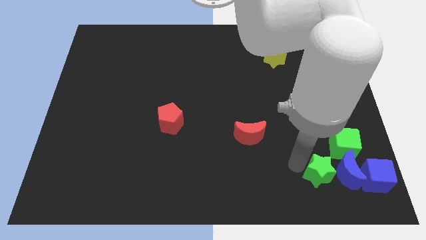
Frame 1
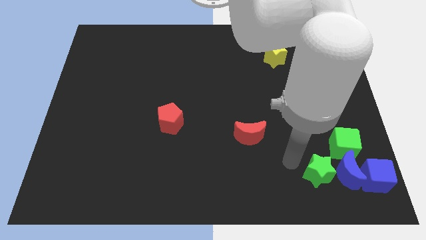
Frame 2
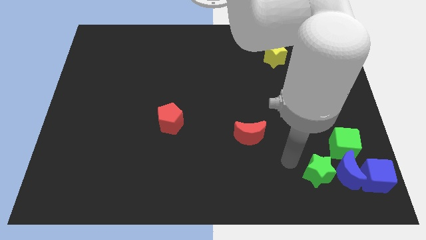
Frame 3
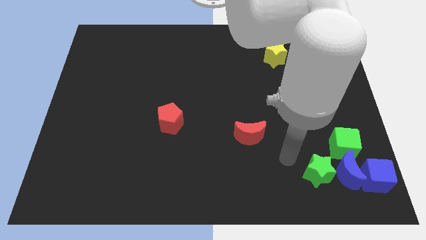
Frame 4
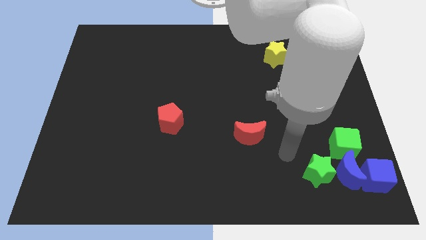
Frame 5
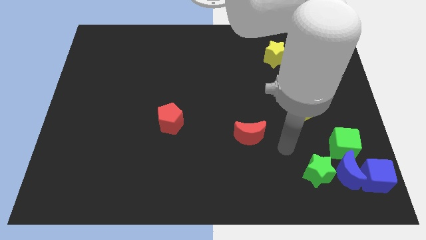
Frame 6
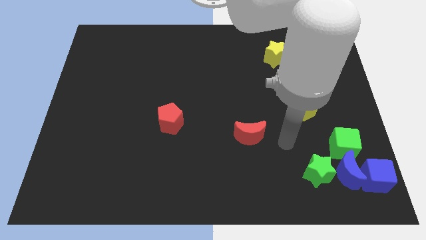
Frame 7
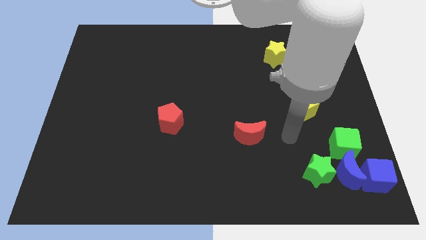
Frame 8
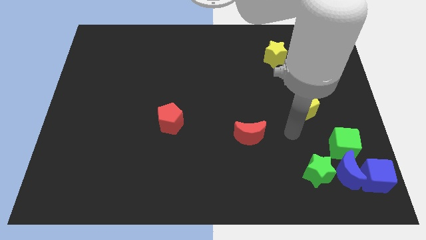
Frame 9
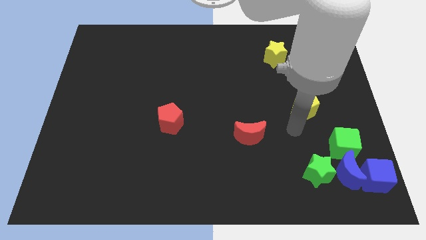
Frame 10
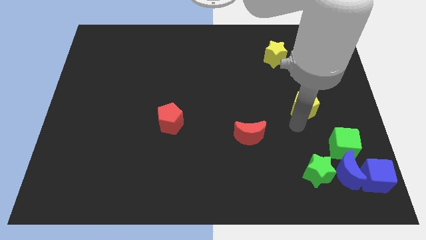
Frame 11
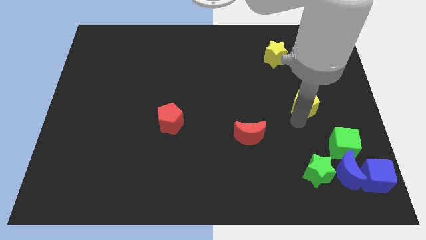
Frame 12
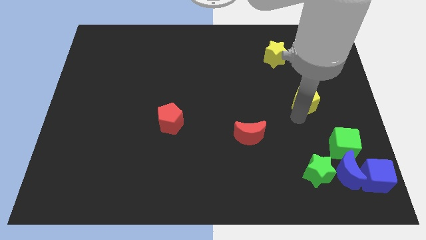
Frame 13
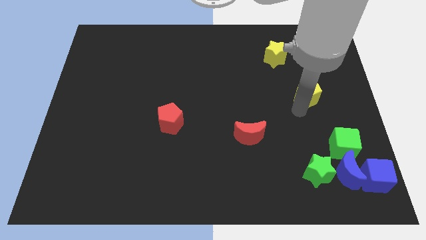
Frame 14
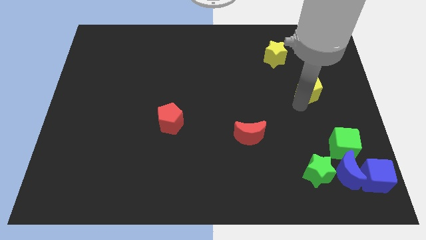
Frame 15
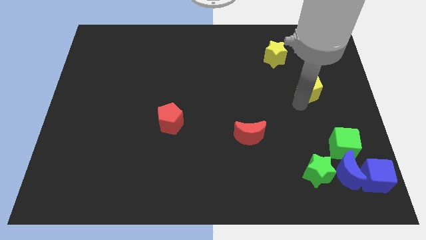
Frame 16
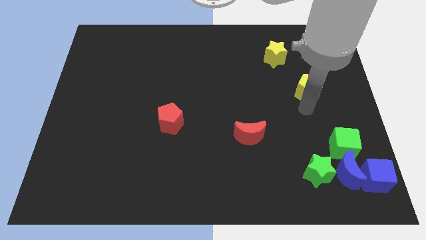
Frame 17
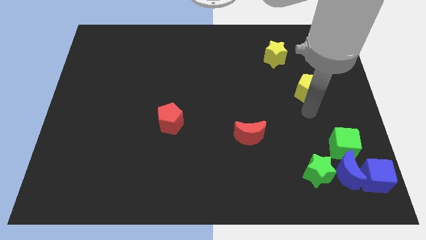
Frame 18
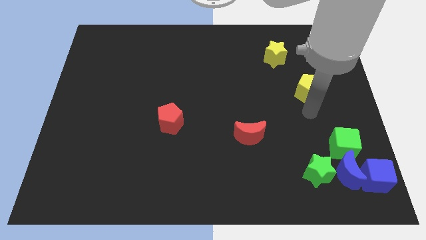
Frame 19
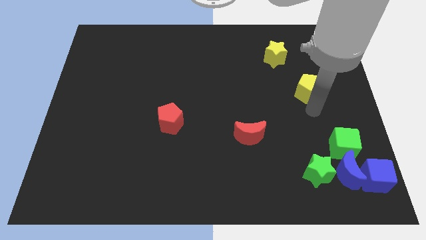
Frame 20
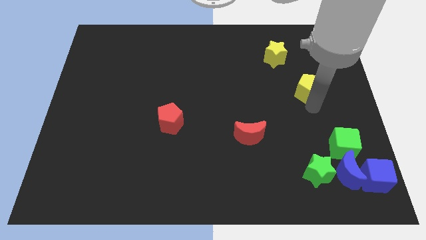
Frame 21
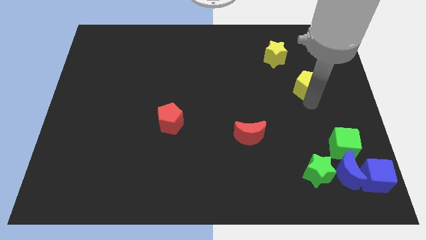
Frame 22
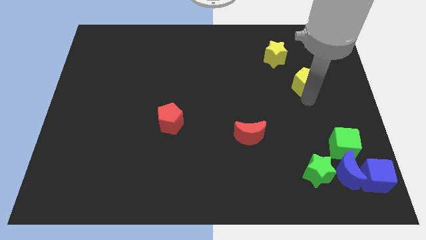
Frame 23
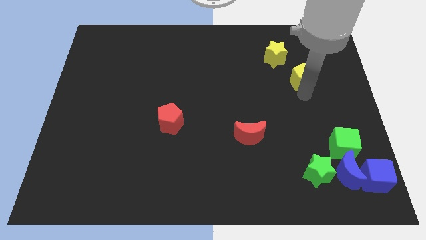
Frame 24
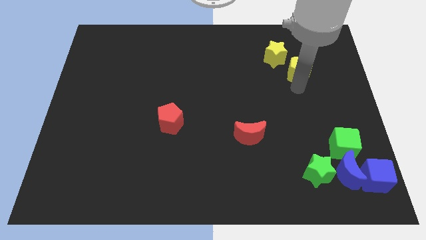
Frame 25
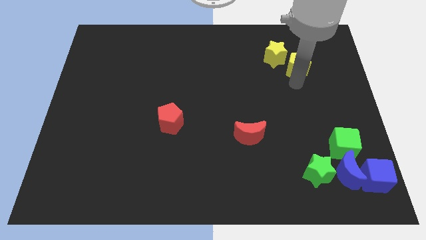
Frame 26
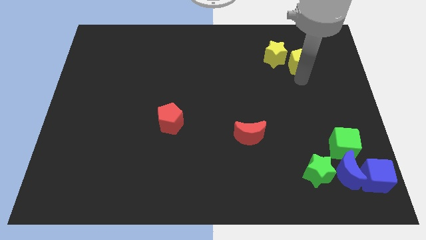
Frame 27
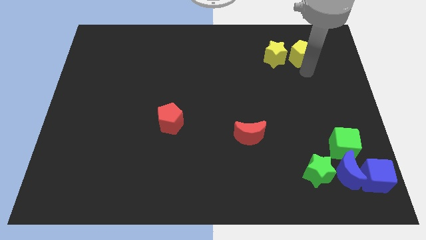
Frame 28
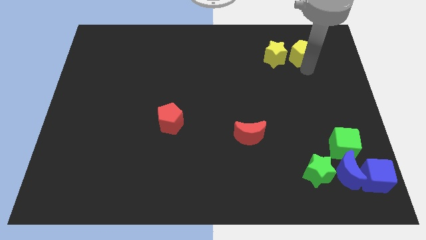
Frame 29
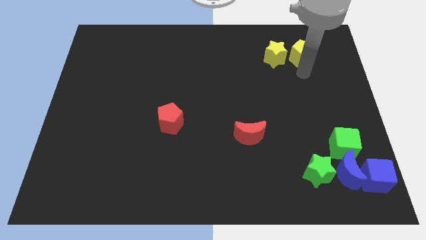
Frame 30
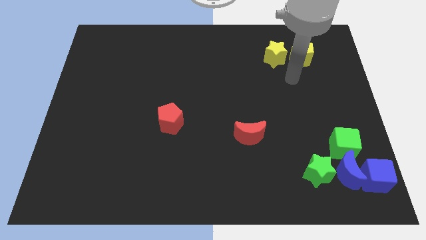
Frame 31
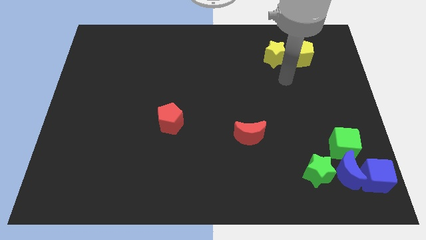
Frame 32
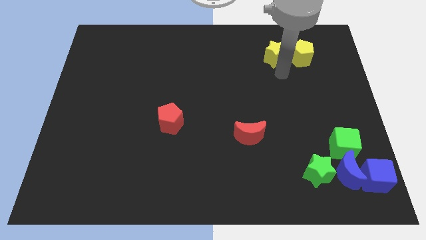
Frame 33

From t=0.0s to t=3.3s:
move the yellow pentagon to the right of the yellow star

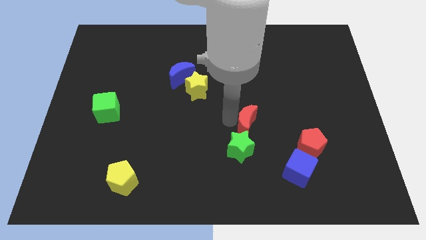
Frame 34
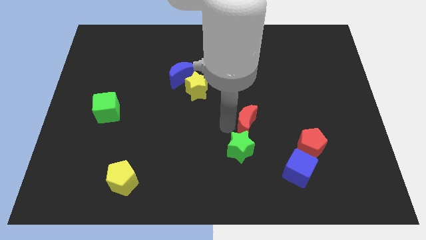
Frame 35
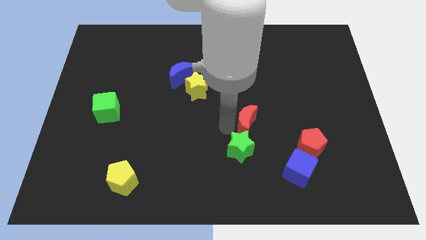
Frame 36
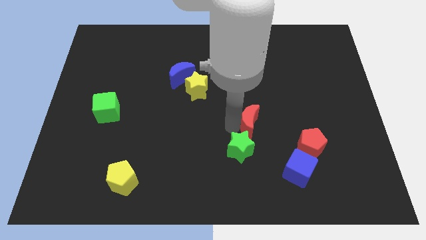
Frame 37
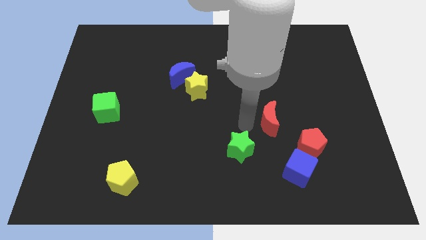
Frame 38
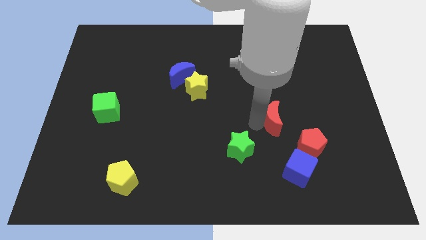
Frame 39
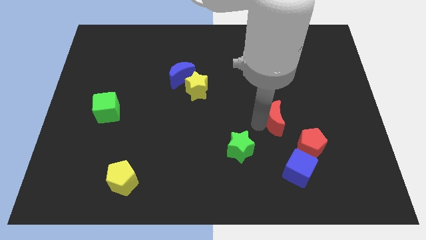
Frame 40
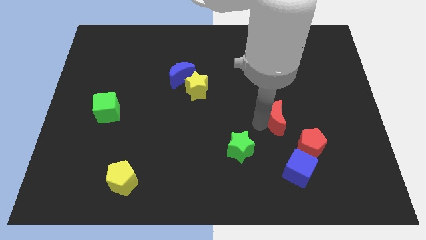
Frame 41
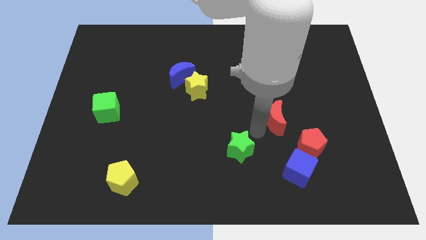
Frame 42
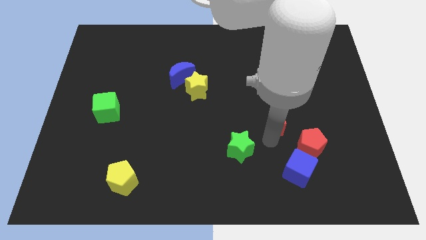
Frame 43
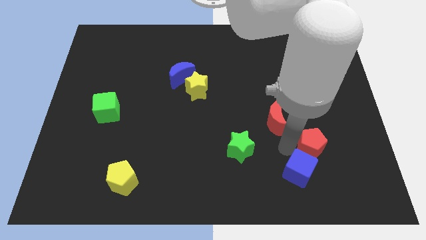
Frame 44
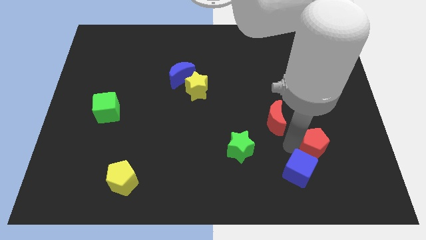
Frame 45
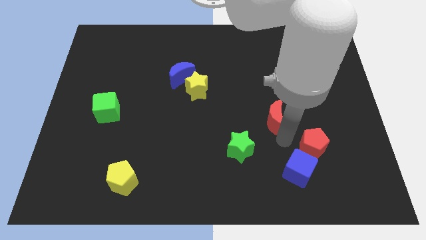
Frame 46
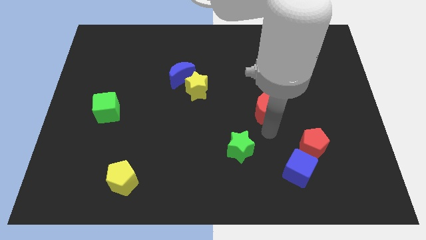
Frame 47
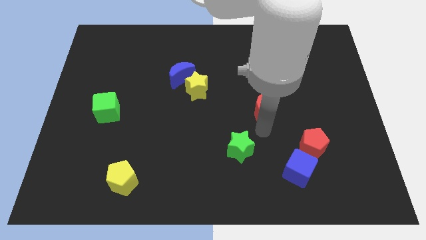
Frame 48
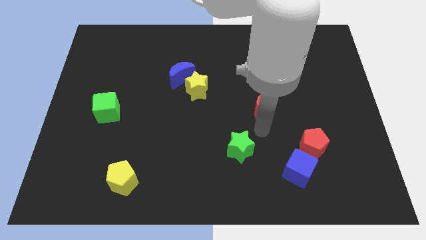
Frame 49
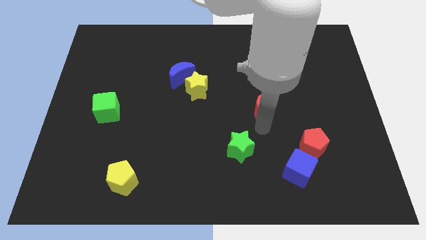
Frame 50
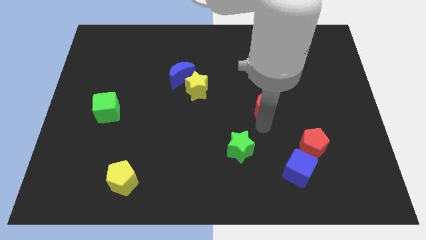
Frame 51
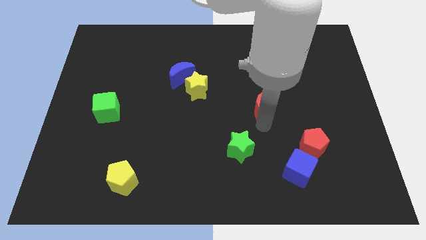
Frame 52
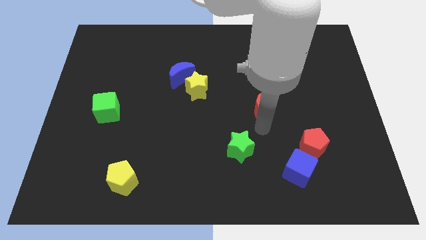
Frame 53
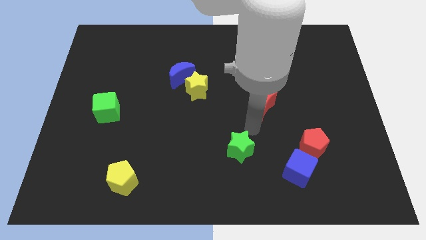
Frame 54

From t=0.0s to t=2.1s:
move the red moon diagonal to red pentagon

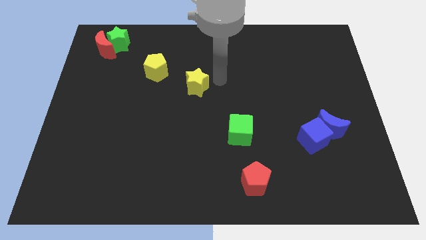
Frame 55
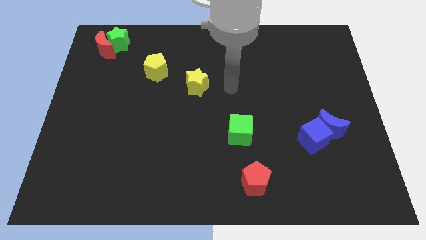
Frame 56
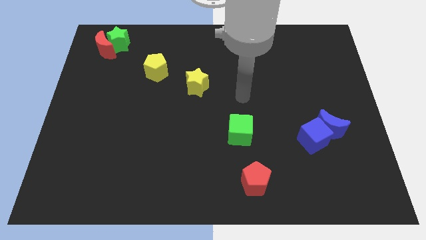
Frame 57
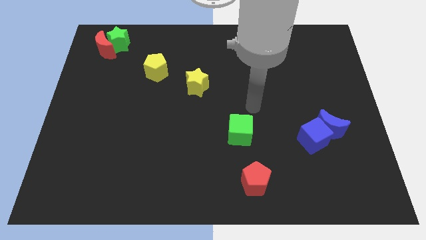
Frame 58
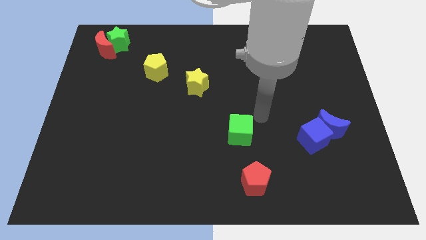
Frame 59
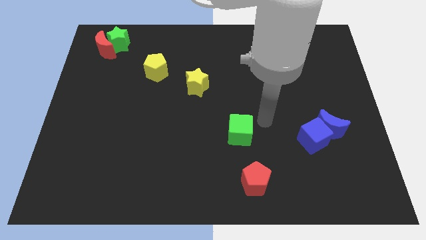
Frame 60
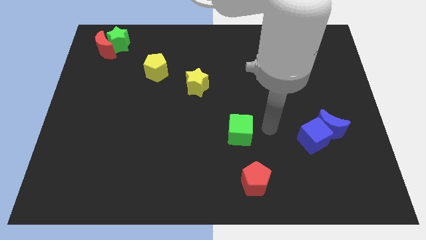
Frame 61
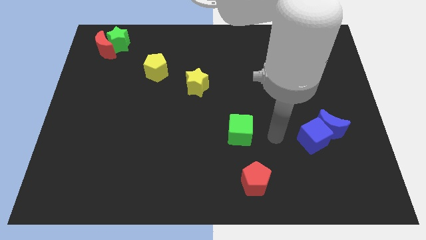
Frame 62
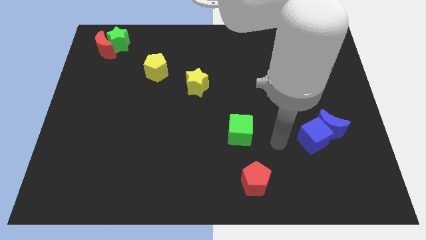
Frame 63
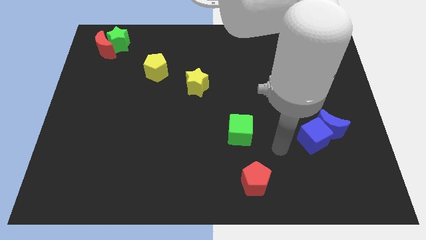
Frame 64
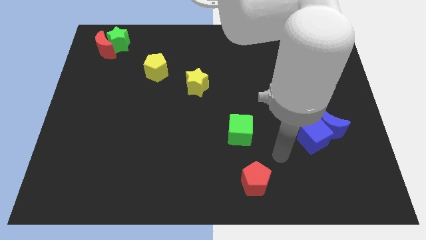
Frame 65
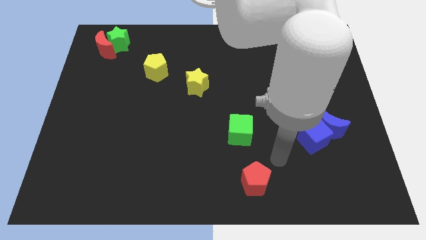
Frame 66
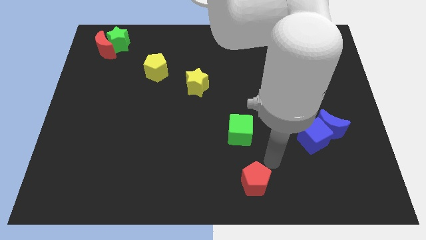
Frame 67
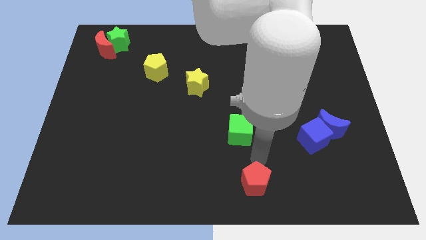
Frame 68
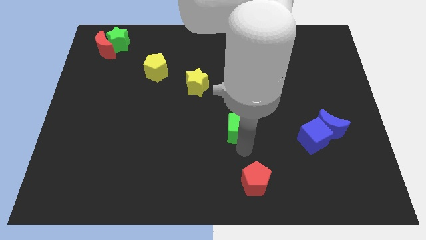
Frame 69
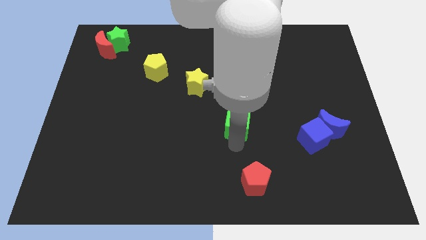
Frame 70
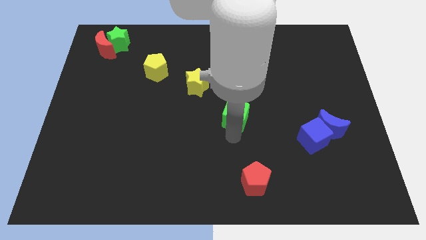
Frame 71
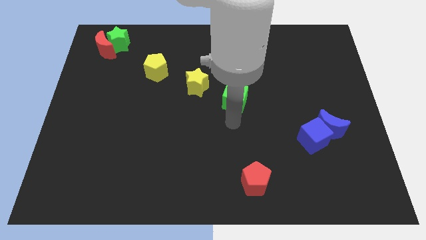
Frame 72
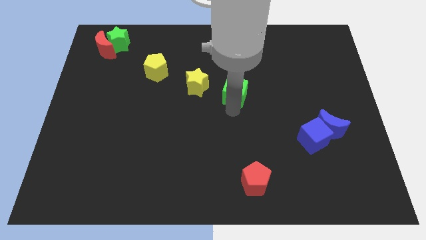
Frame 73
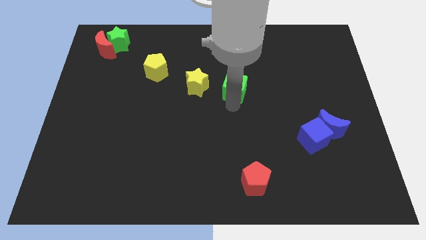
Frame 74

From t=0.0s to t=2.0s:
move the green cube to the top side of the board

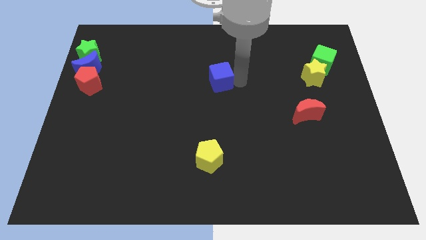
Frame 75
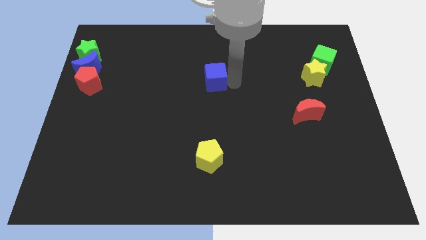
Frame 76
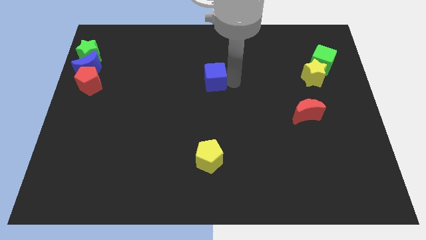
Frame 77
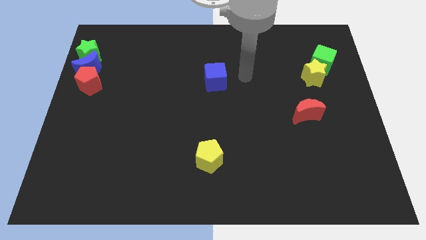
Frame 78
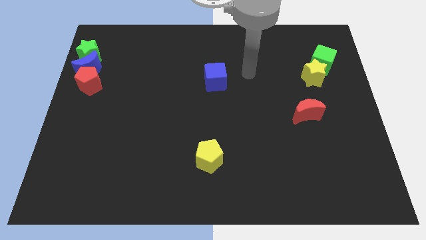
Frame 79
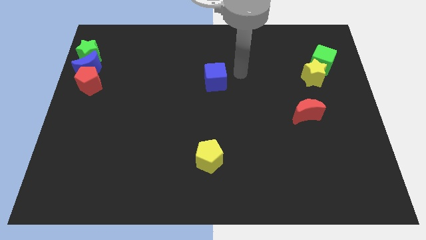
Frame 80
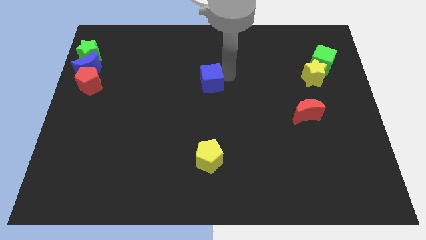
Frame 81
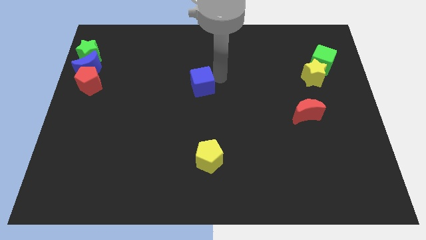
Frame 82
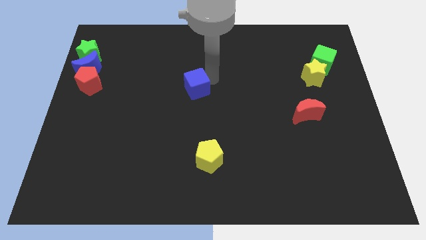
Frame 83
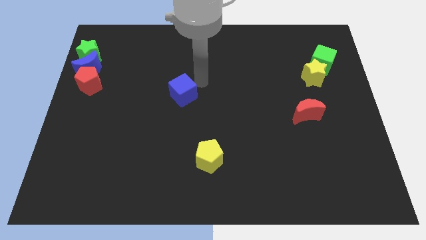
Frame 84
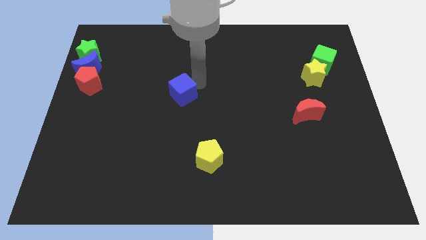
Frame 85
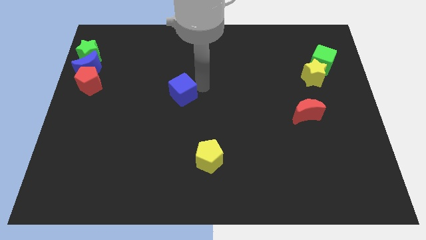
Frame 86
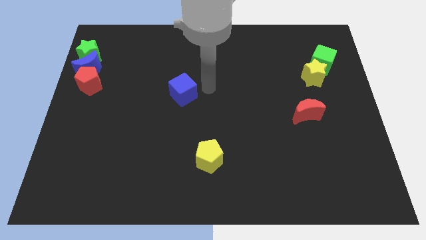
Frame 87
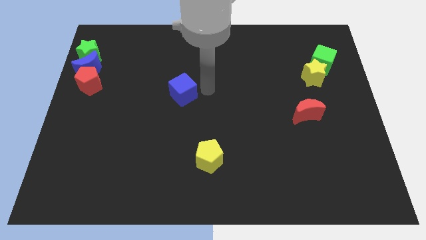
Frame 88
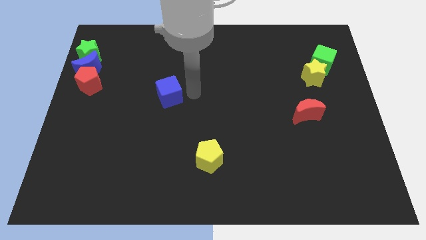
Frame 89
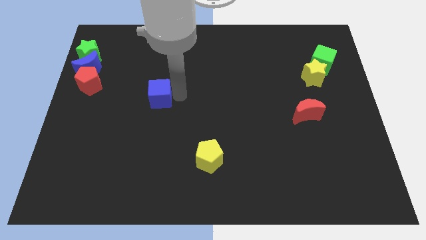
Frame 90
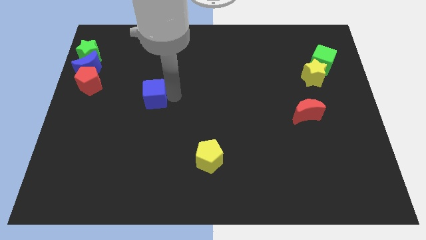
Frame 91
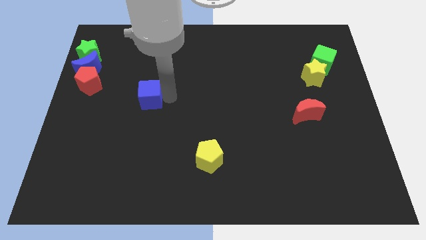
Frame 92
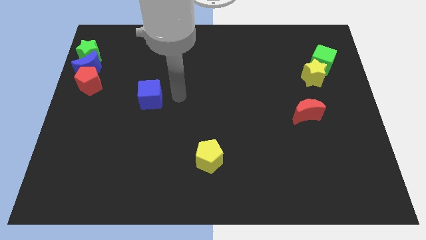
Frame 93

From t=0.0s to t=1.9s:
push the blue cube slightly to the left
